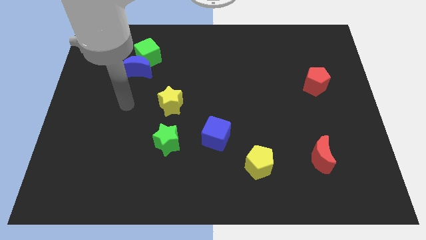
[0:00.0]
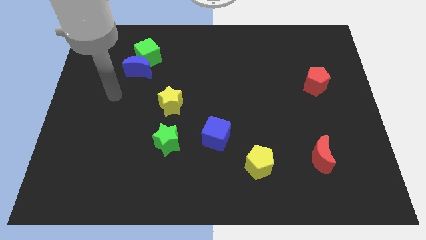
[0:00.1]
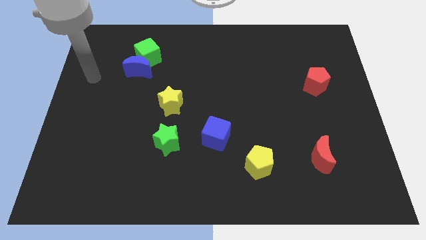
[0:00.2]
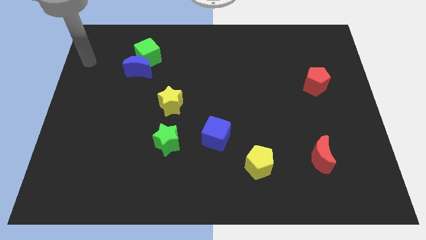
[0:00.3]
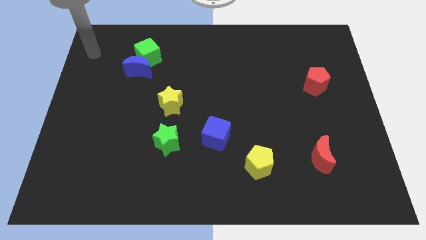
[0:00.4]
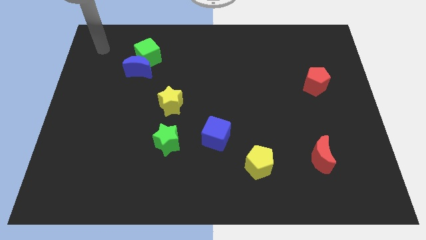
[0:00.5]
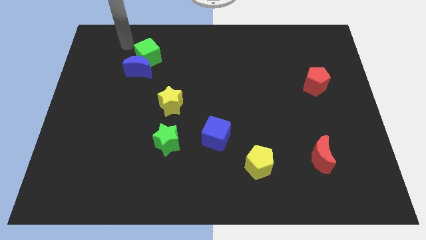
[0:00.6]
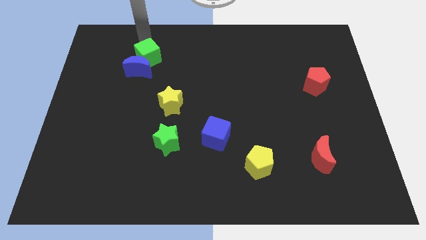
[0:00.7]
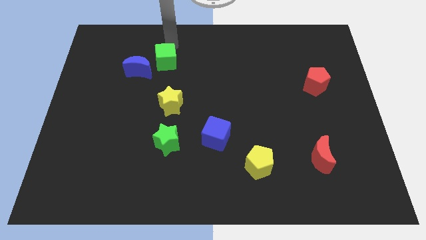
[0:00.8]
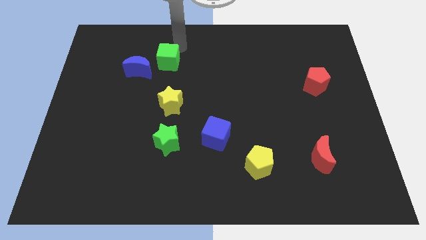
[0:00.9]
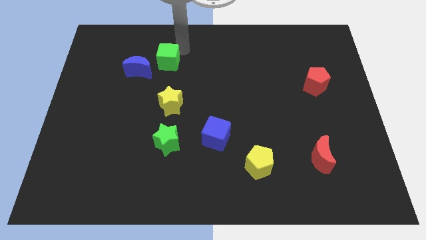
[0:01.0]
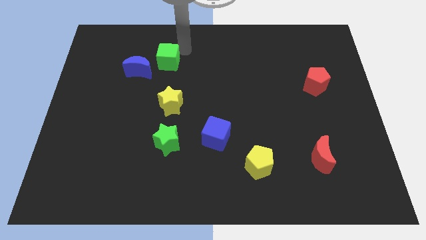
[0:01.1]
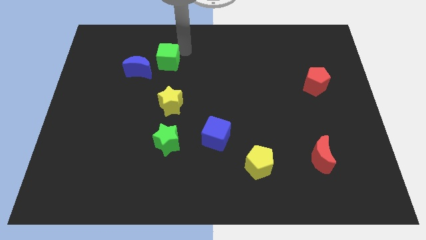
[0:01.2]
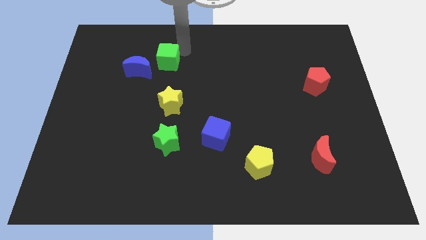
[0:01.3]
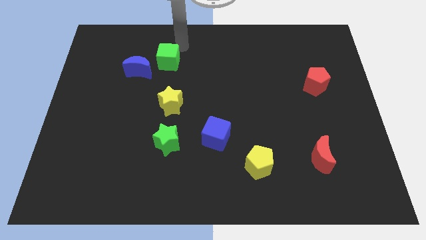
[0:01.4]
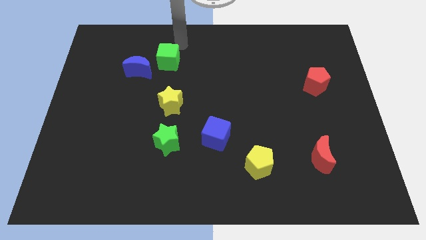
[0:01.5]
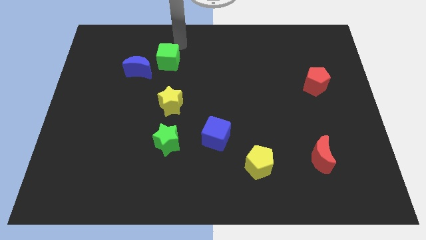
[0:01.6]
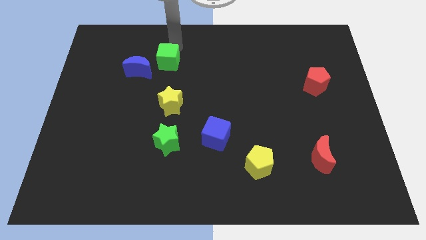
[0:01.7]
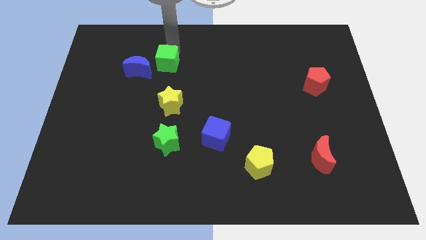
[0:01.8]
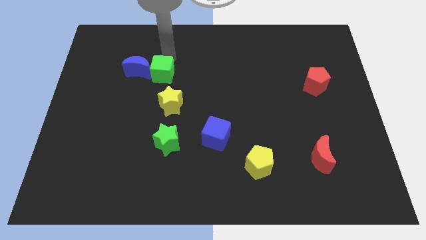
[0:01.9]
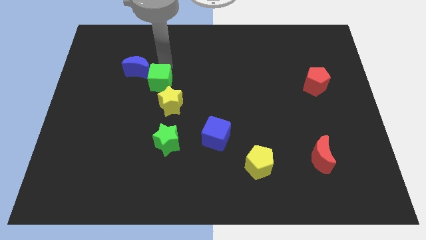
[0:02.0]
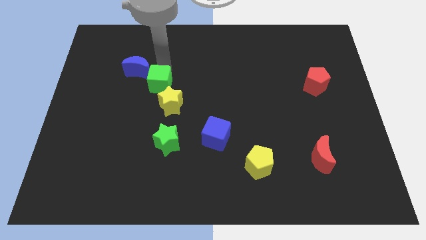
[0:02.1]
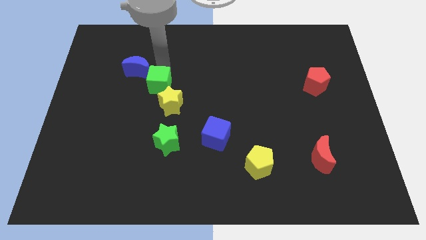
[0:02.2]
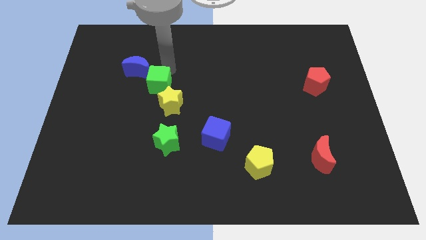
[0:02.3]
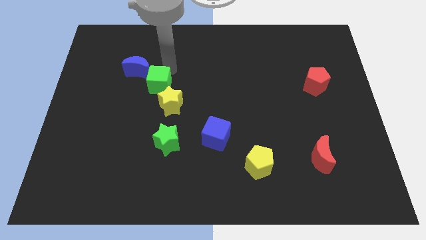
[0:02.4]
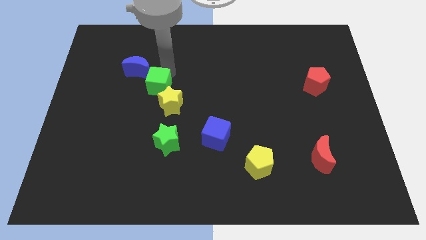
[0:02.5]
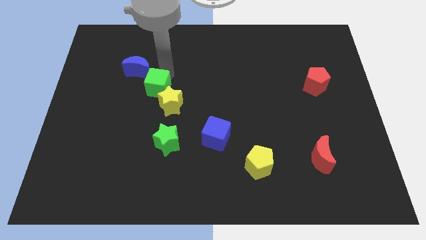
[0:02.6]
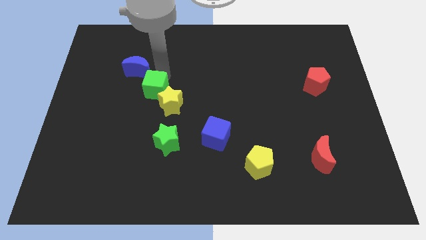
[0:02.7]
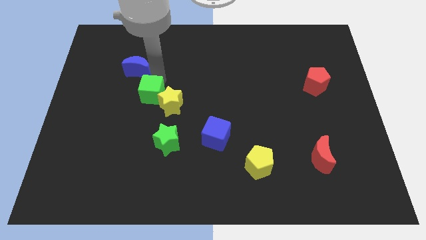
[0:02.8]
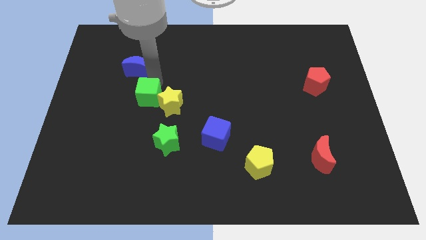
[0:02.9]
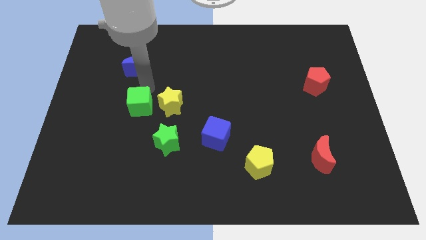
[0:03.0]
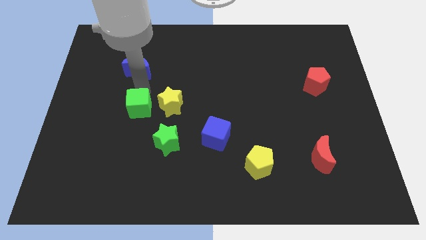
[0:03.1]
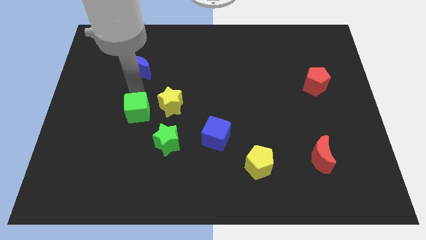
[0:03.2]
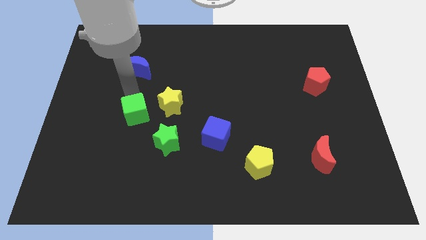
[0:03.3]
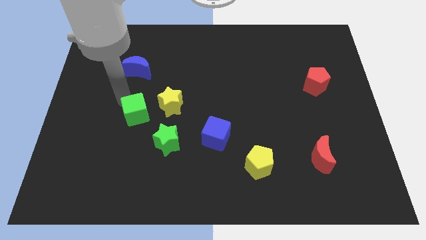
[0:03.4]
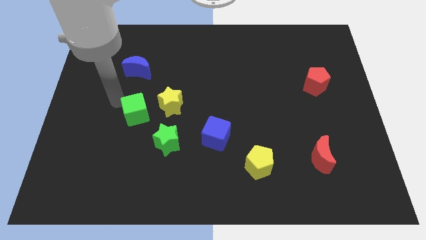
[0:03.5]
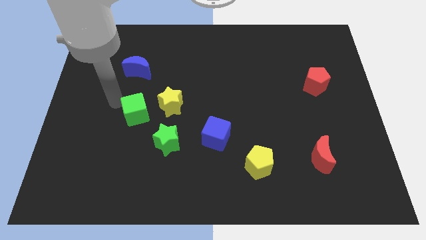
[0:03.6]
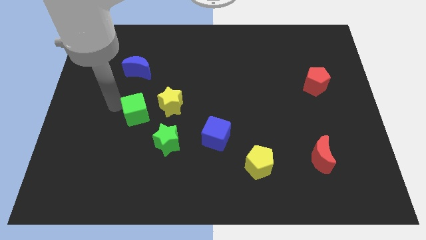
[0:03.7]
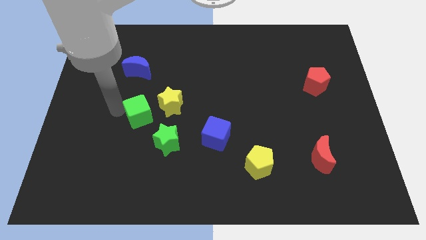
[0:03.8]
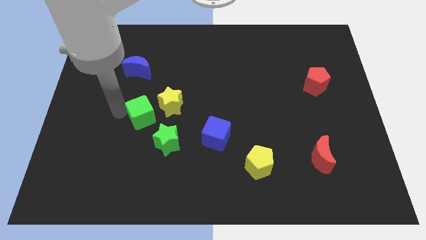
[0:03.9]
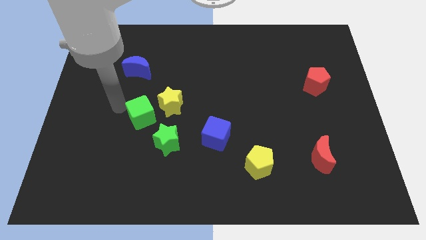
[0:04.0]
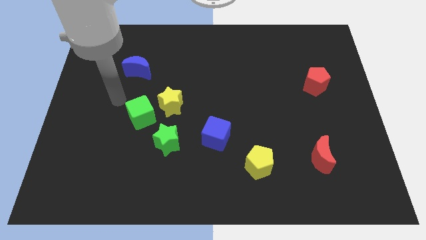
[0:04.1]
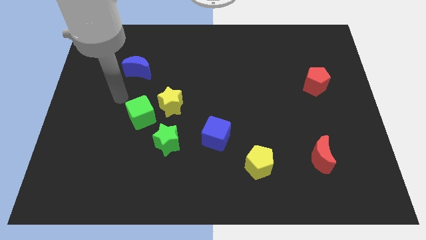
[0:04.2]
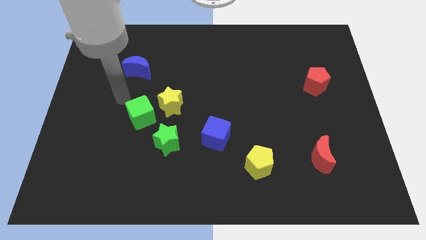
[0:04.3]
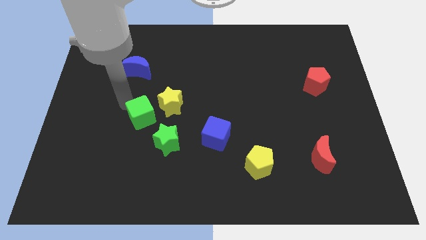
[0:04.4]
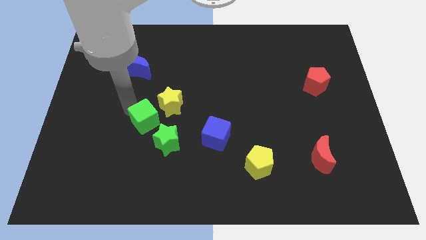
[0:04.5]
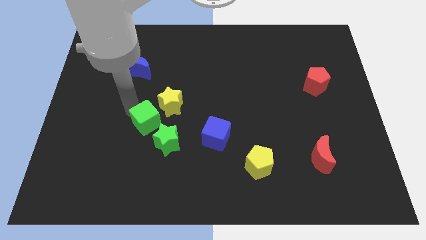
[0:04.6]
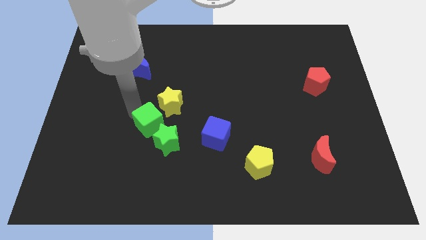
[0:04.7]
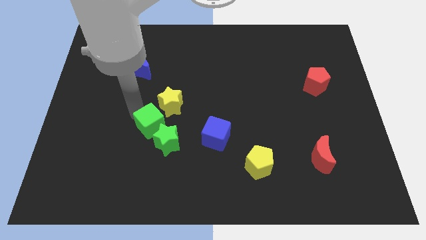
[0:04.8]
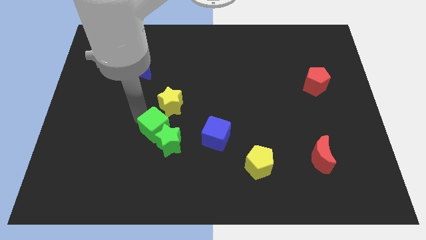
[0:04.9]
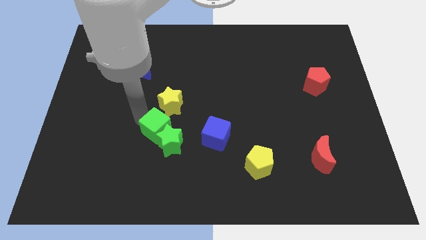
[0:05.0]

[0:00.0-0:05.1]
push the green cube close to the green star

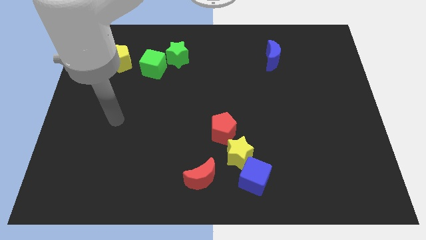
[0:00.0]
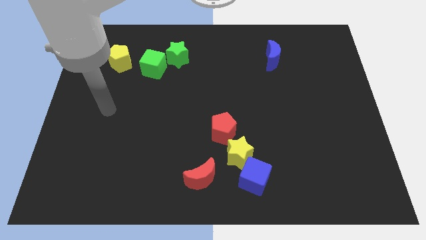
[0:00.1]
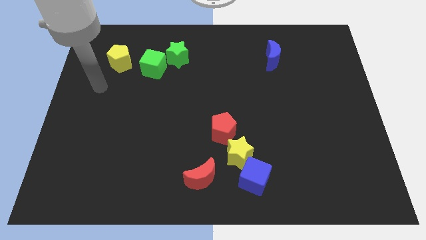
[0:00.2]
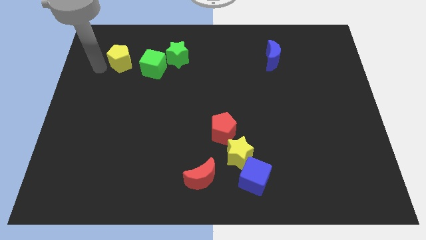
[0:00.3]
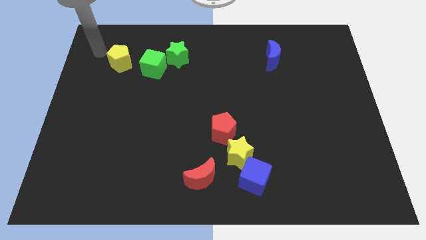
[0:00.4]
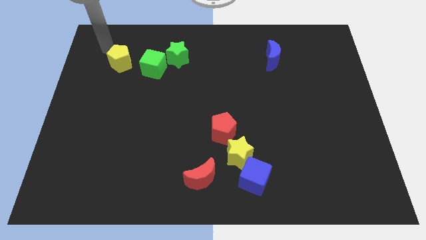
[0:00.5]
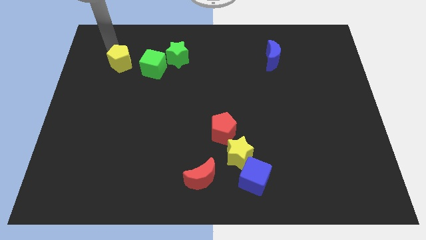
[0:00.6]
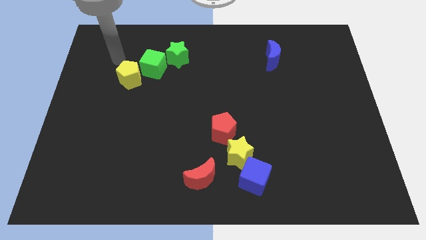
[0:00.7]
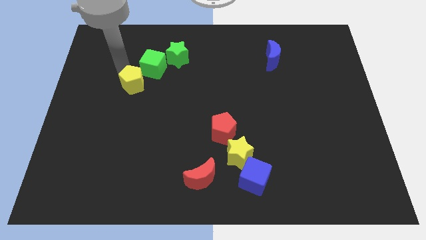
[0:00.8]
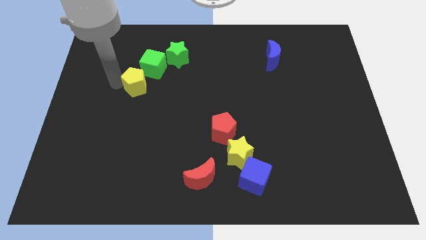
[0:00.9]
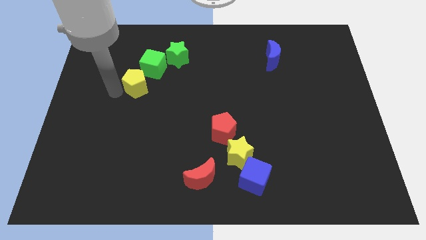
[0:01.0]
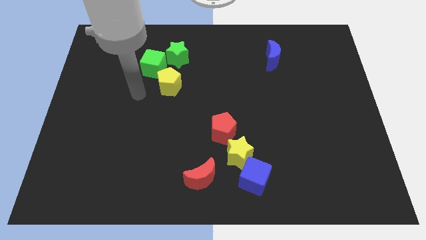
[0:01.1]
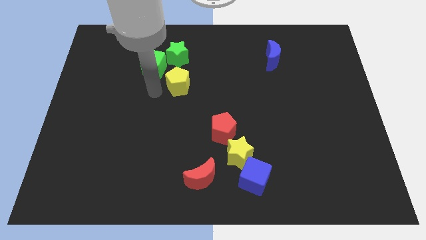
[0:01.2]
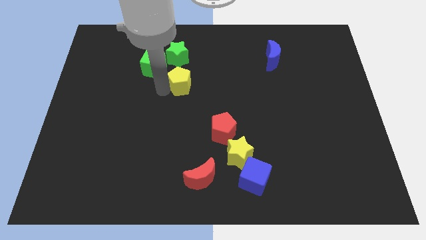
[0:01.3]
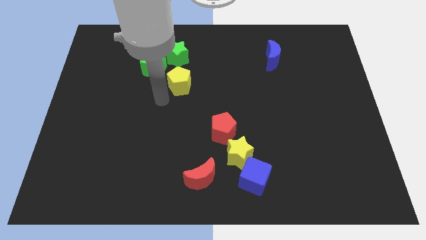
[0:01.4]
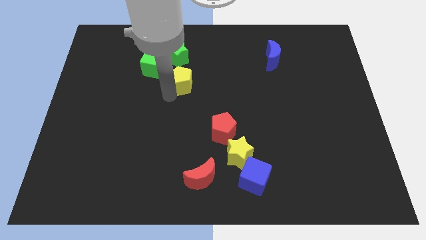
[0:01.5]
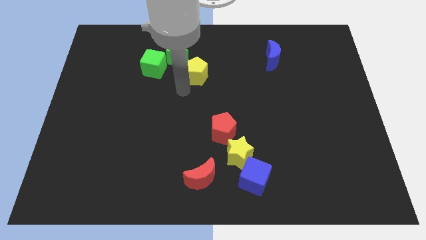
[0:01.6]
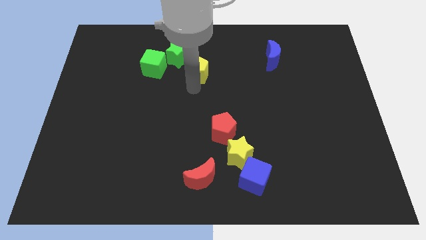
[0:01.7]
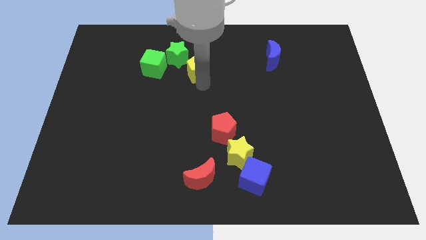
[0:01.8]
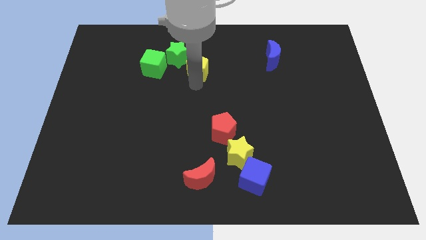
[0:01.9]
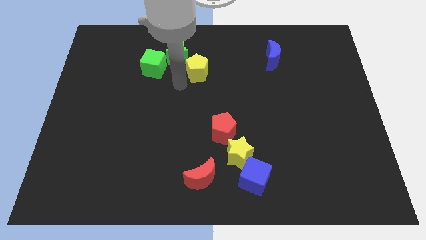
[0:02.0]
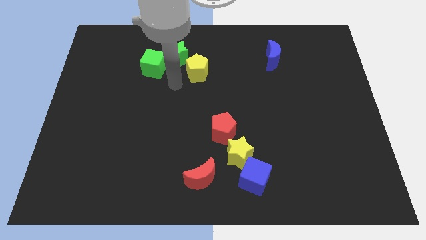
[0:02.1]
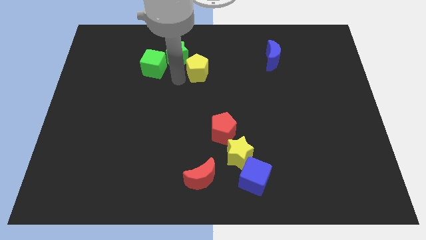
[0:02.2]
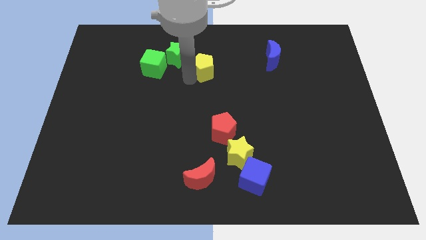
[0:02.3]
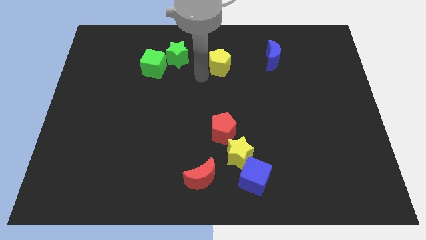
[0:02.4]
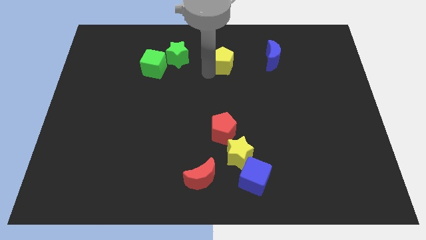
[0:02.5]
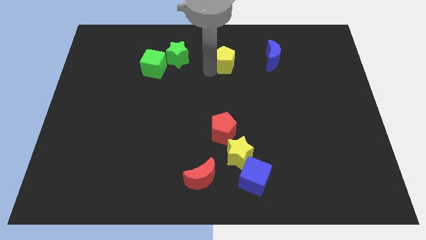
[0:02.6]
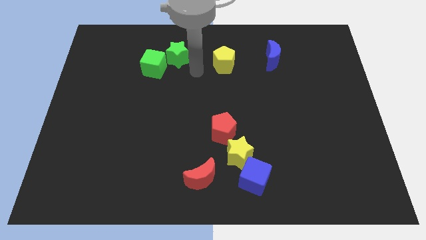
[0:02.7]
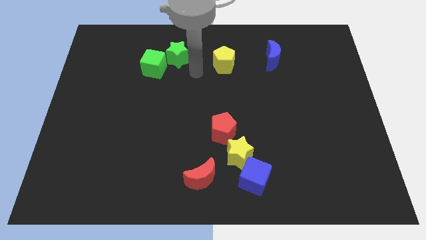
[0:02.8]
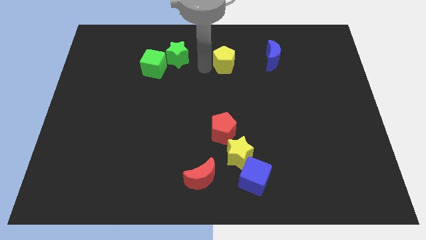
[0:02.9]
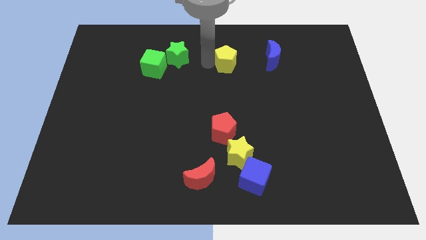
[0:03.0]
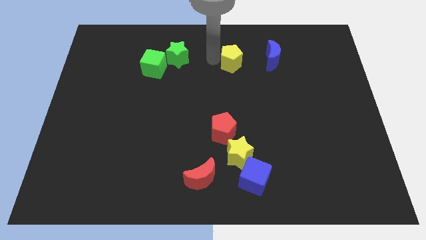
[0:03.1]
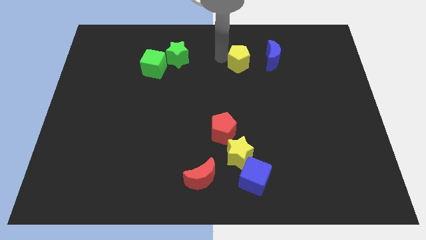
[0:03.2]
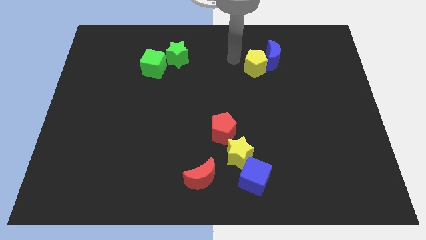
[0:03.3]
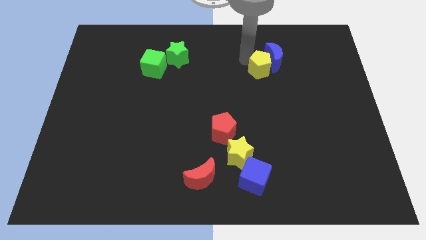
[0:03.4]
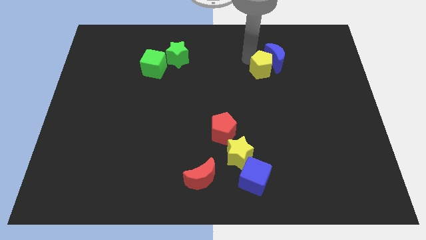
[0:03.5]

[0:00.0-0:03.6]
move the yellow pentagon towards the blue moon
